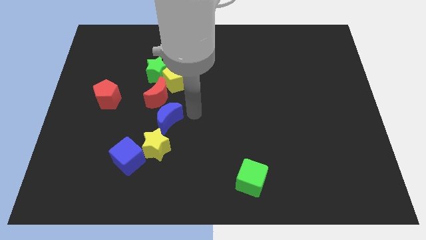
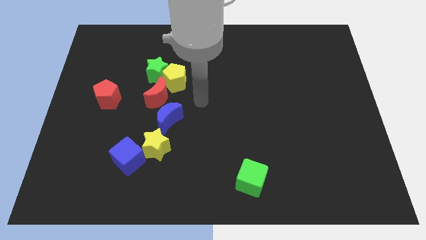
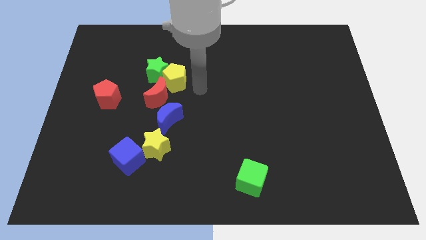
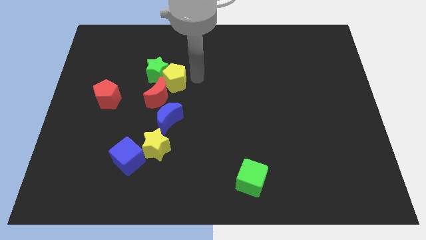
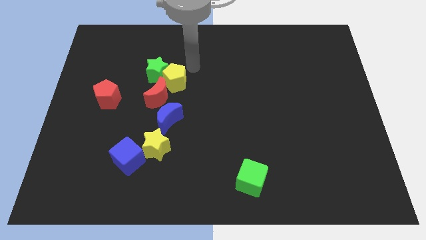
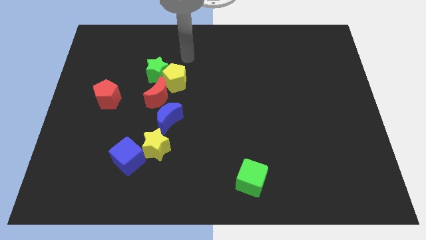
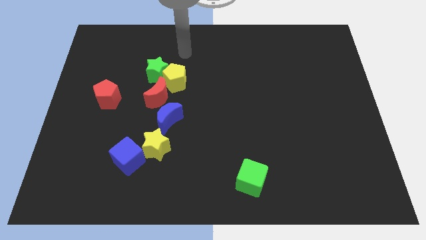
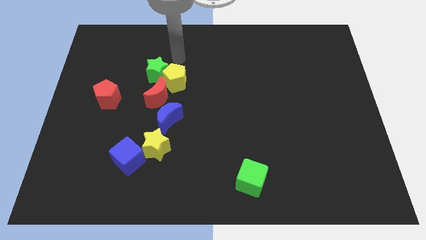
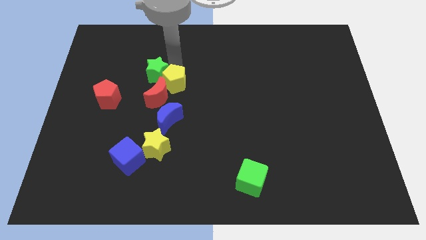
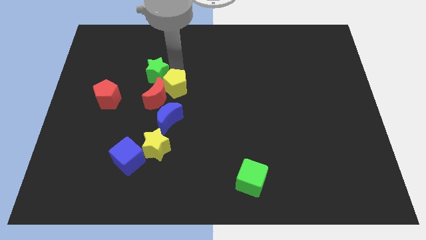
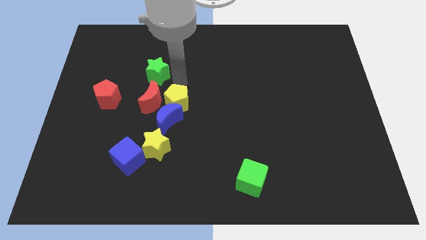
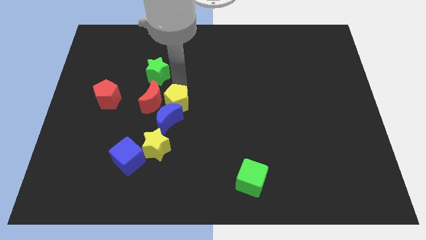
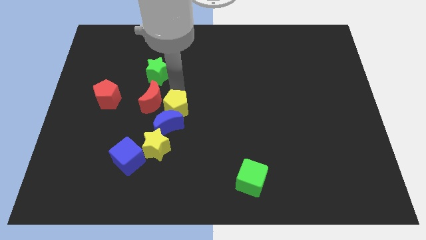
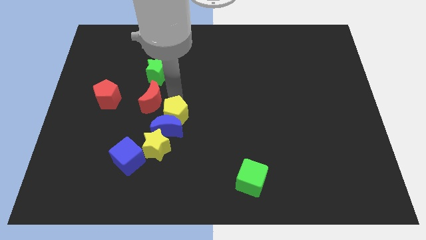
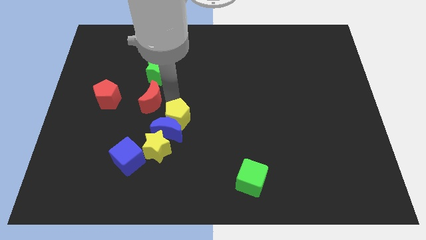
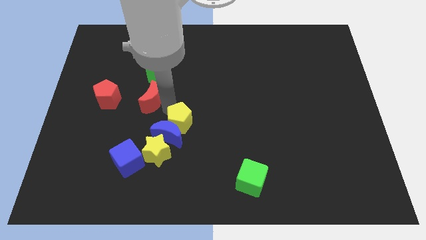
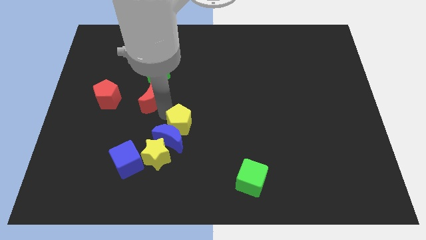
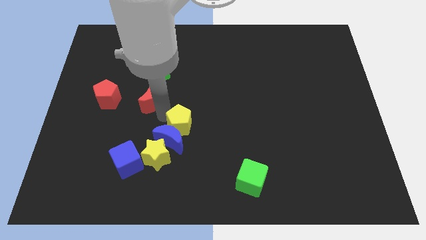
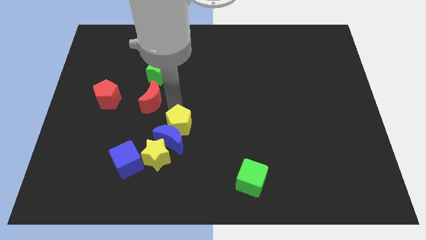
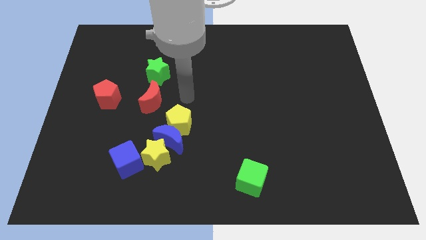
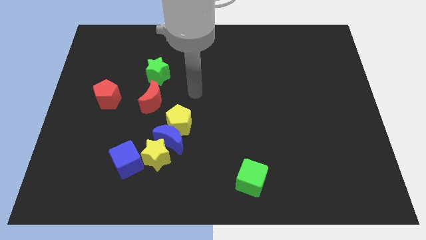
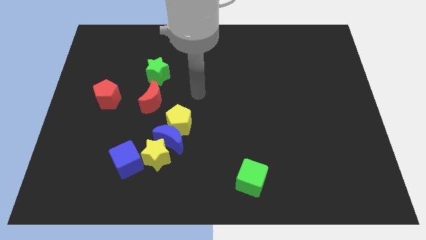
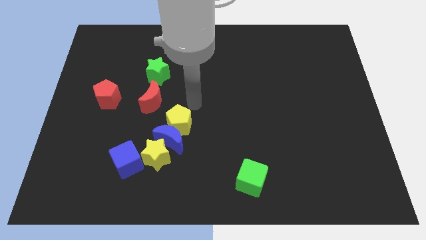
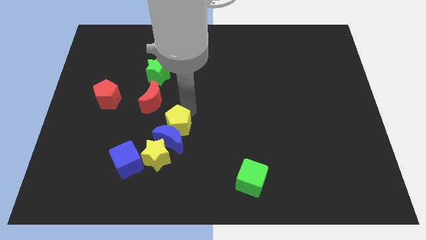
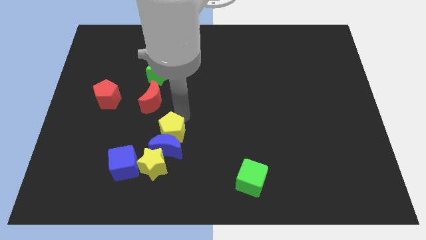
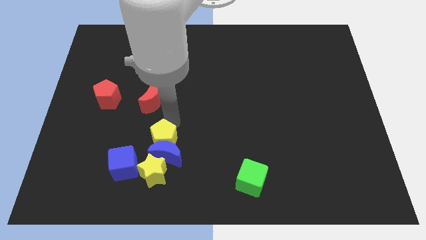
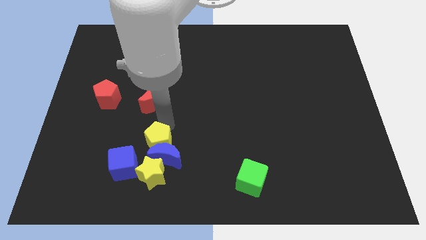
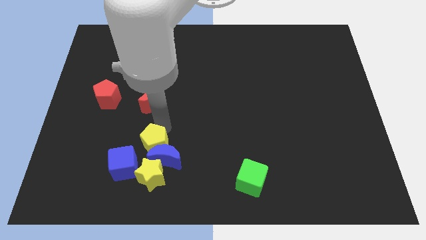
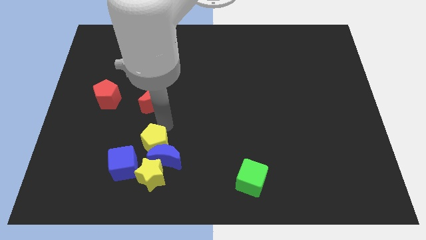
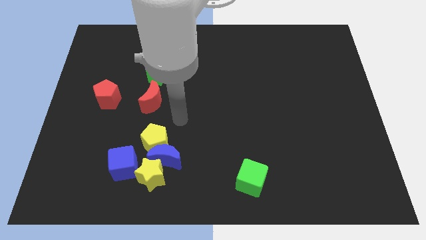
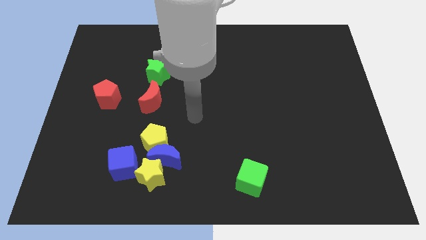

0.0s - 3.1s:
push the yellow pentagon into the blue crescent

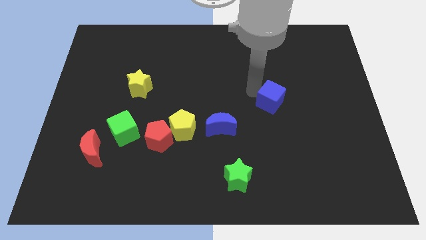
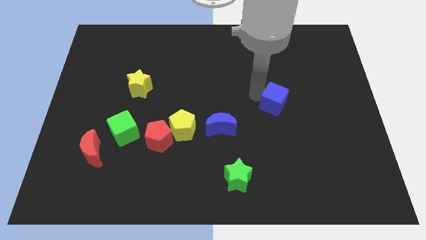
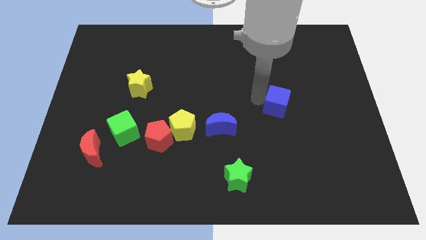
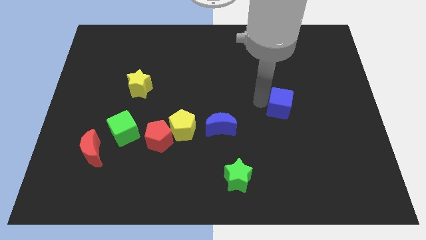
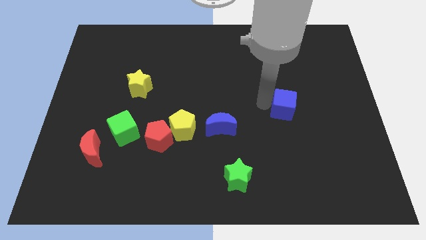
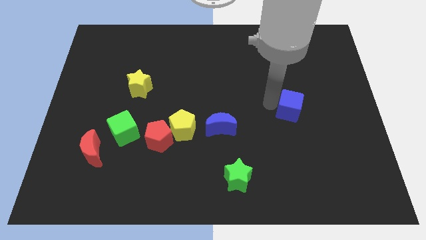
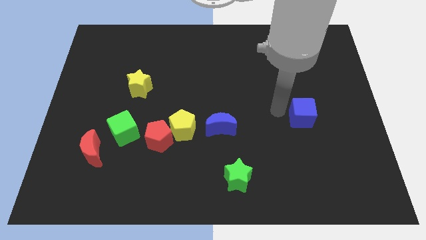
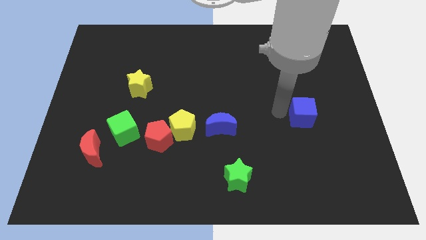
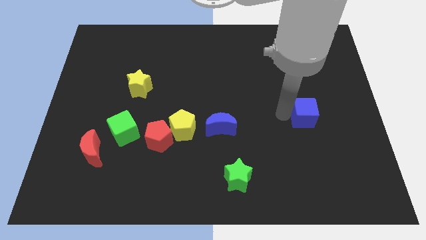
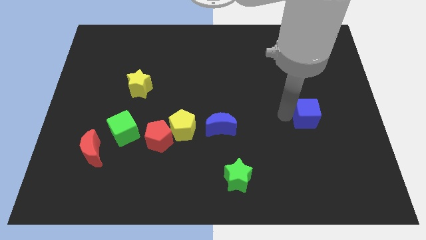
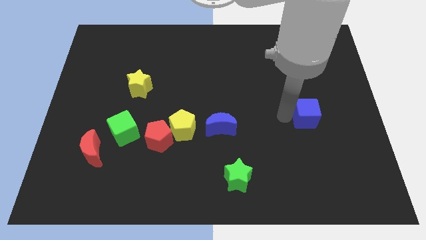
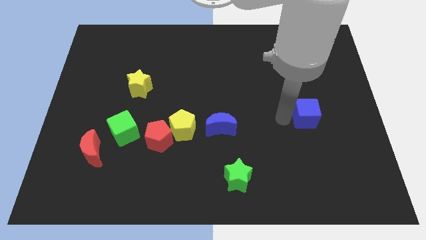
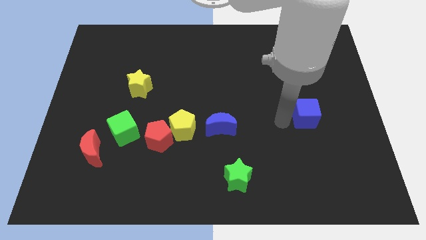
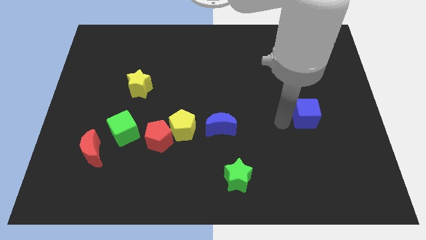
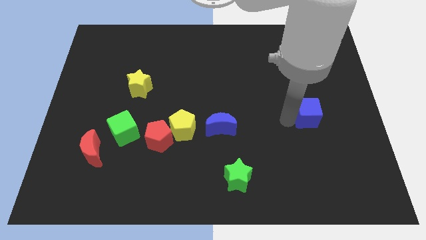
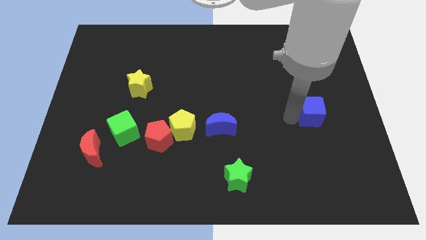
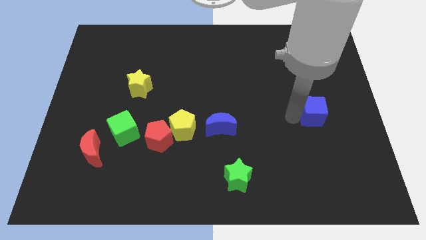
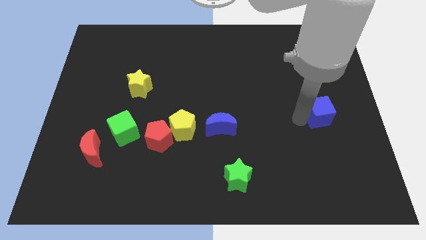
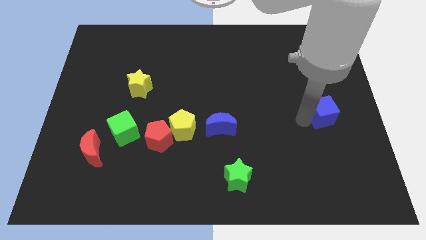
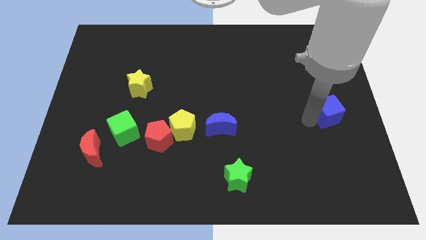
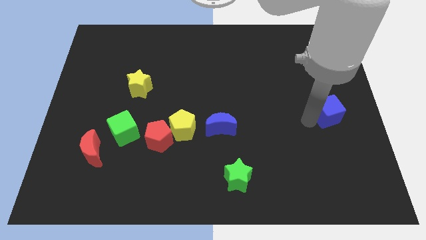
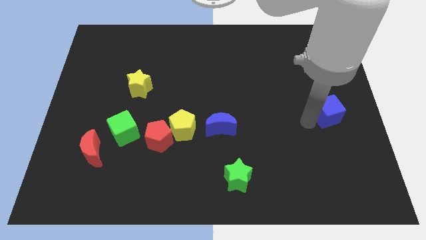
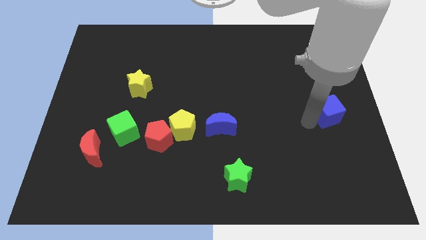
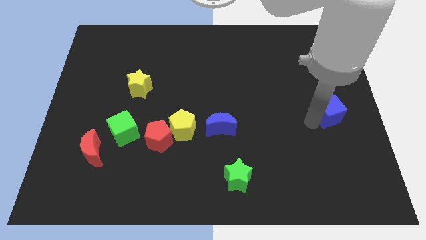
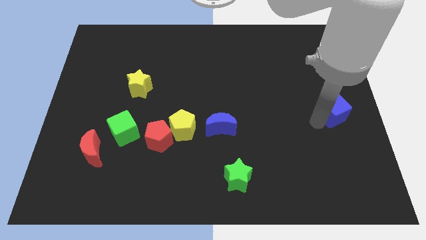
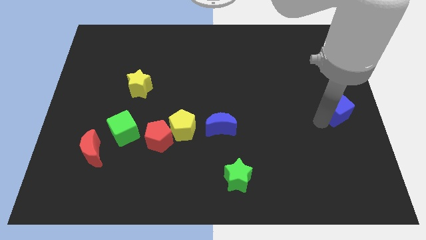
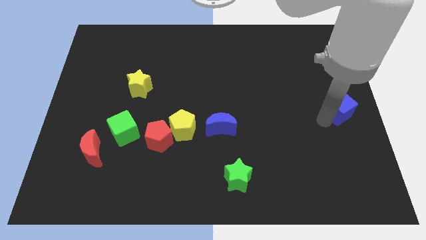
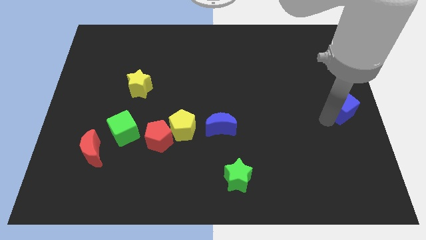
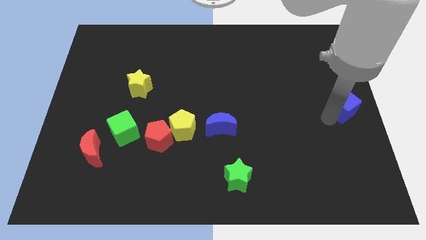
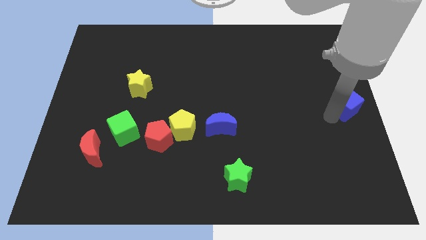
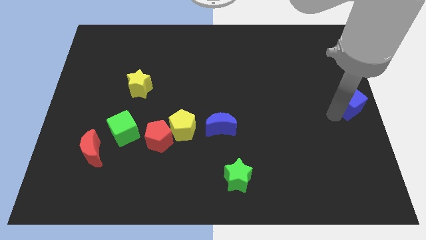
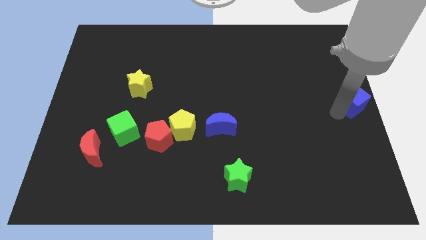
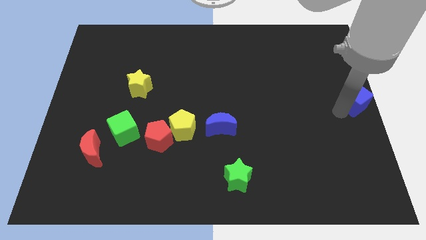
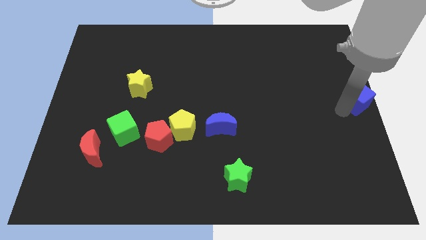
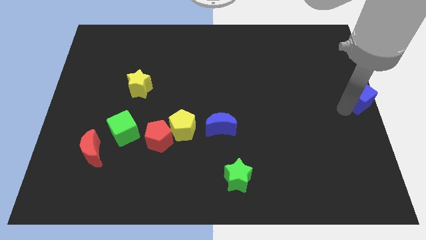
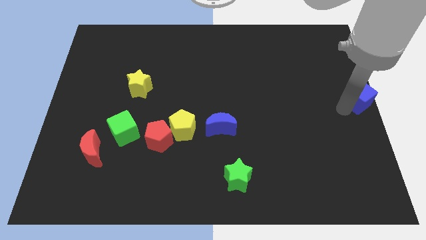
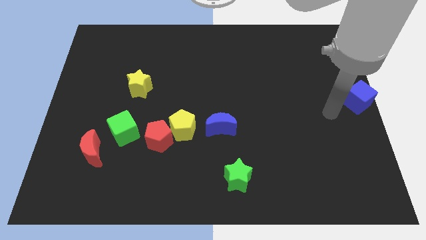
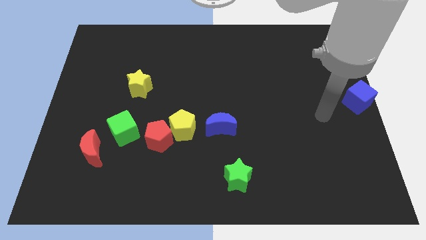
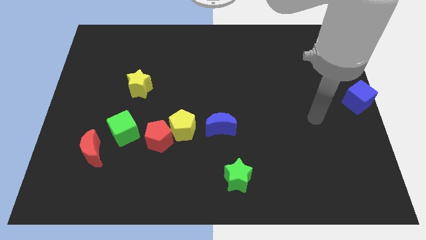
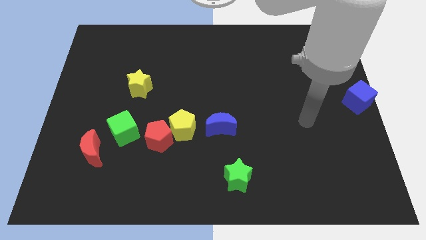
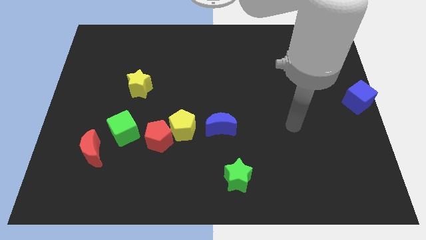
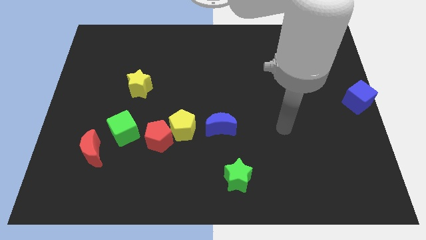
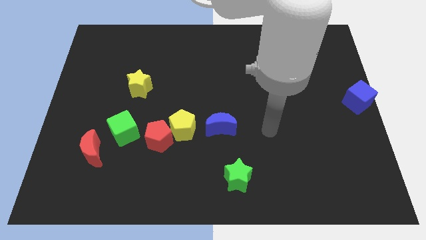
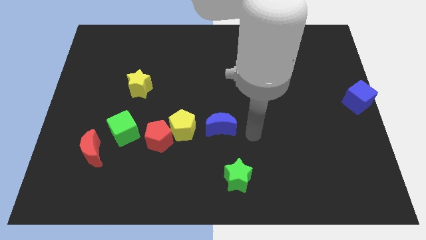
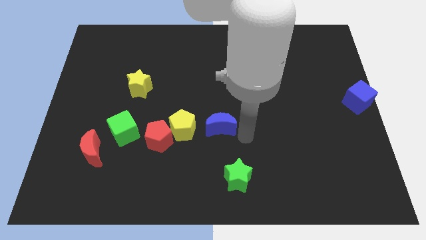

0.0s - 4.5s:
move the blue cube to the center right of the board

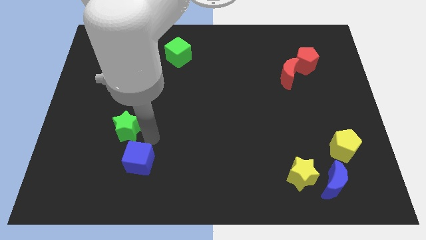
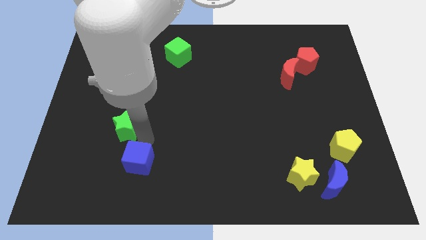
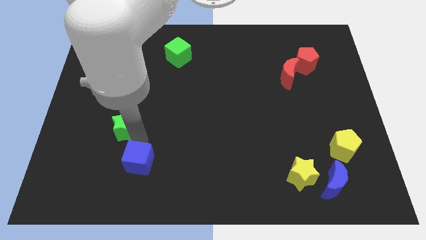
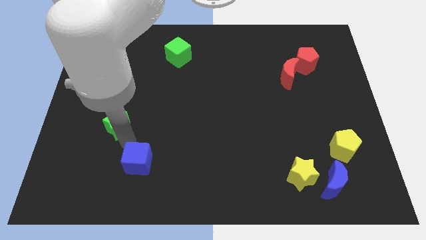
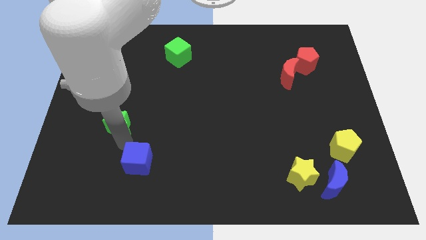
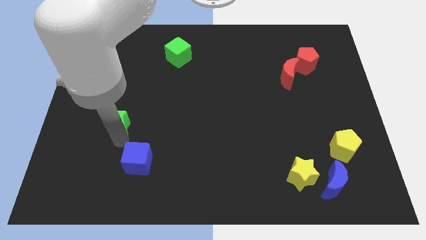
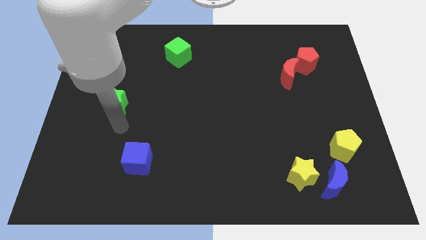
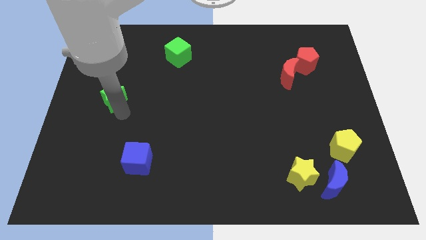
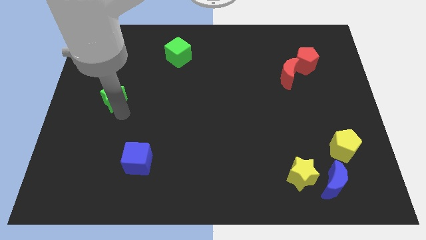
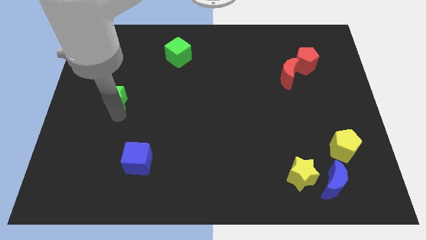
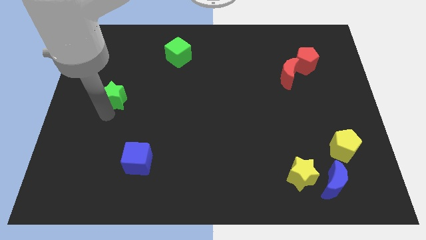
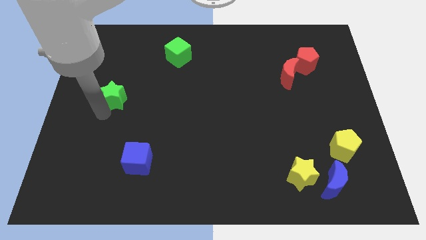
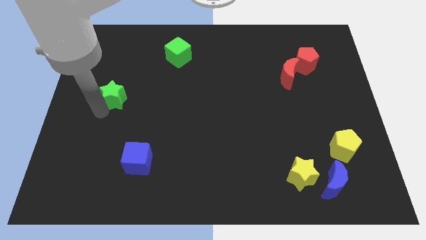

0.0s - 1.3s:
drag the green star to the top

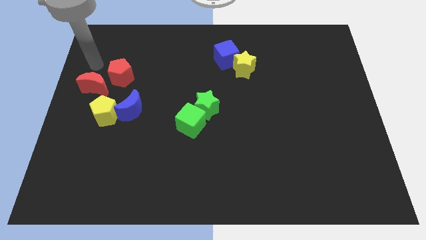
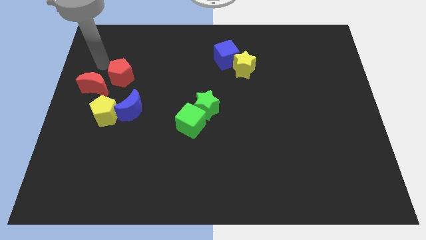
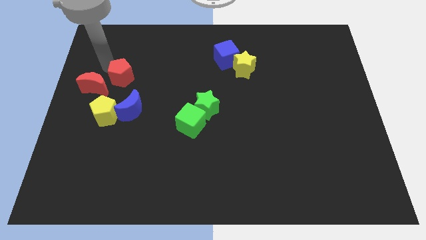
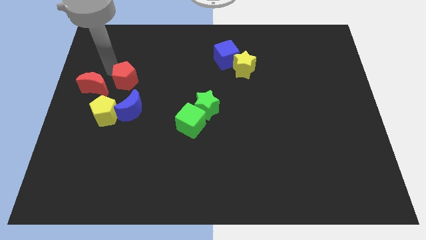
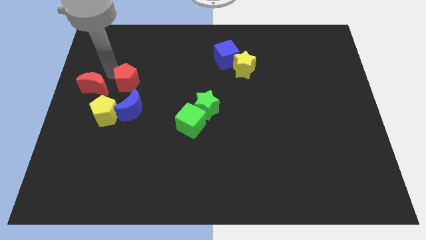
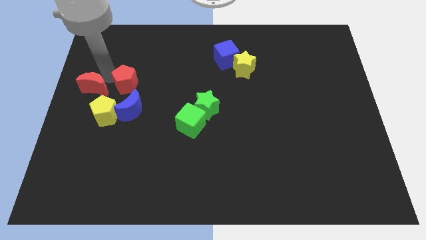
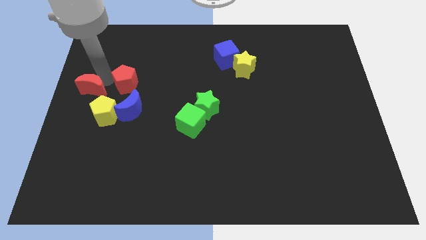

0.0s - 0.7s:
move the red pentagon slightly towards the blue moon
